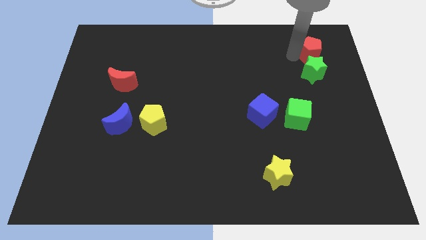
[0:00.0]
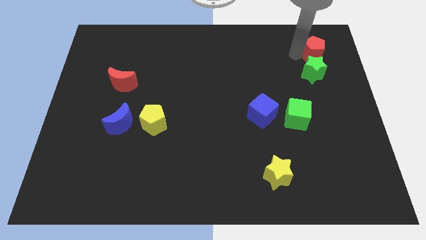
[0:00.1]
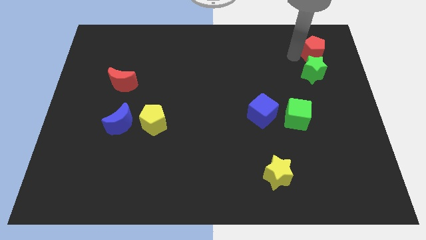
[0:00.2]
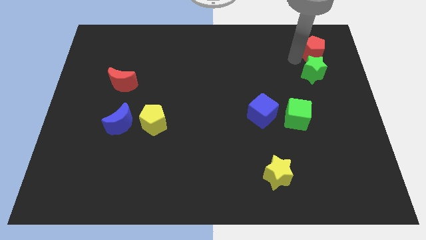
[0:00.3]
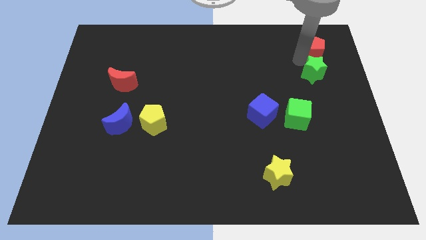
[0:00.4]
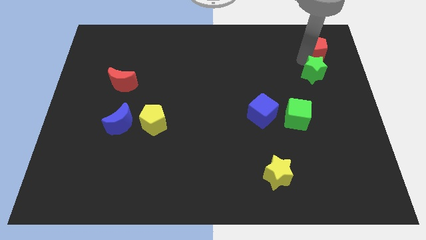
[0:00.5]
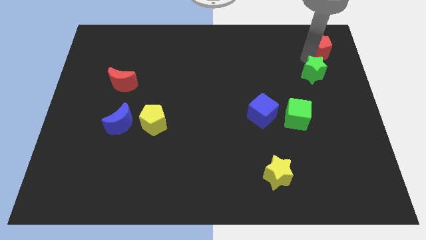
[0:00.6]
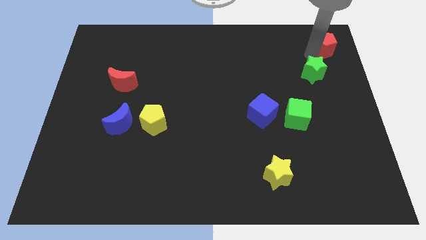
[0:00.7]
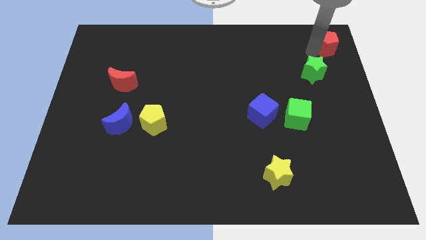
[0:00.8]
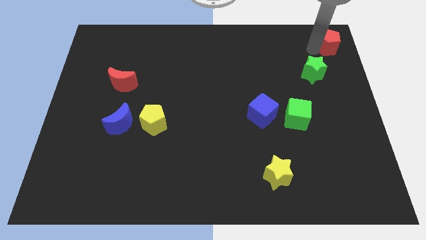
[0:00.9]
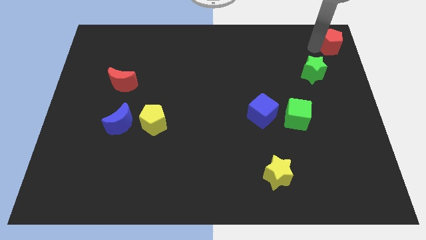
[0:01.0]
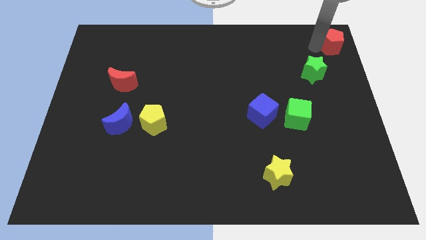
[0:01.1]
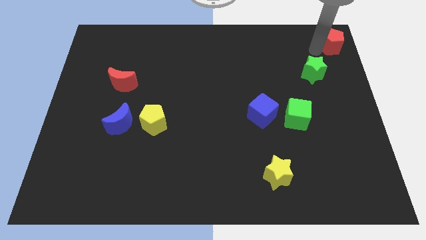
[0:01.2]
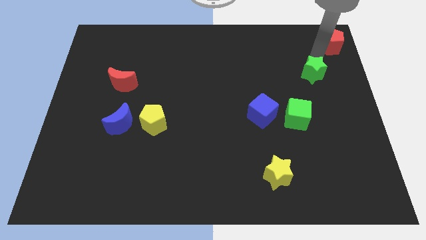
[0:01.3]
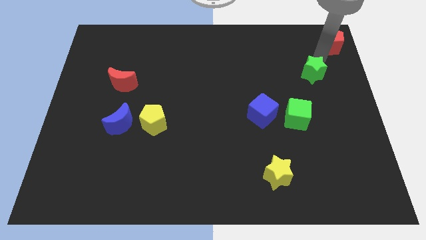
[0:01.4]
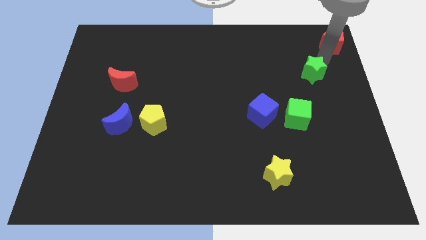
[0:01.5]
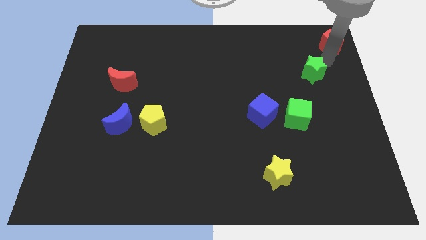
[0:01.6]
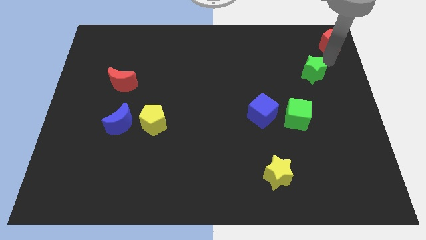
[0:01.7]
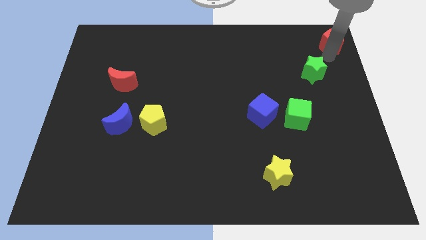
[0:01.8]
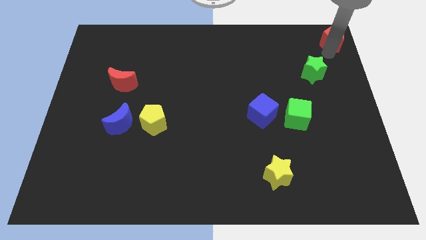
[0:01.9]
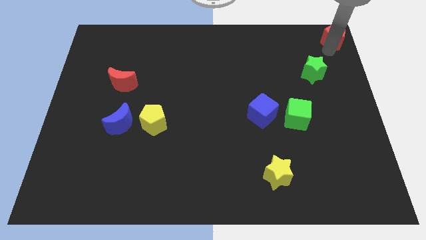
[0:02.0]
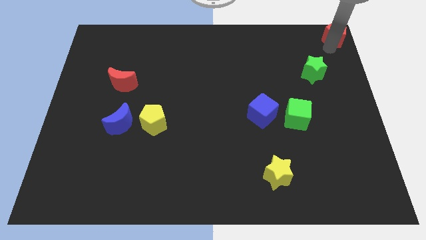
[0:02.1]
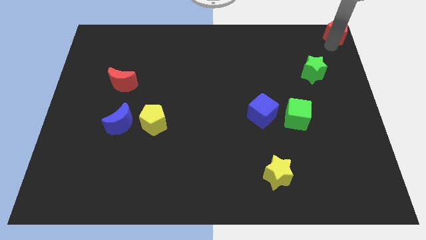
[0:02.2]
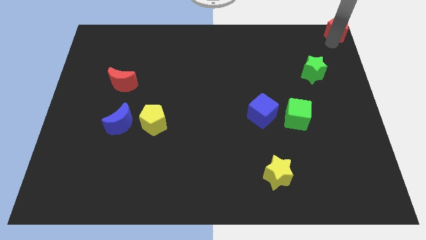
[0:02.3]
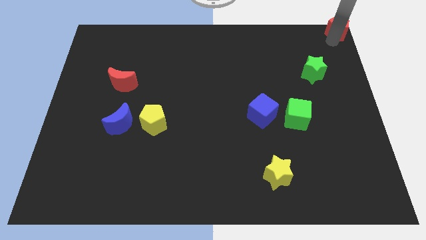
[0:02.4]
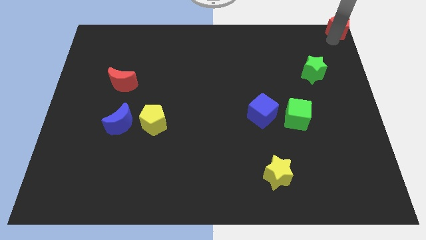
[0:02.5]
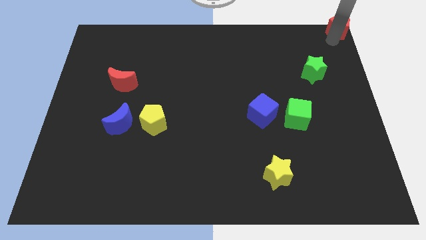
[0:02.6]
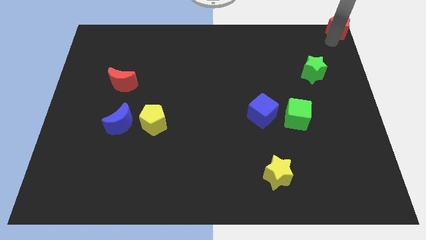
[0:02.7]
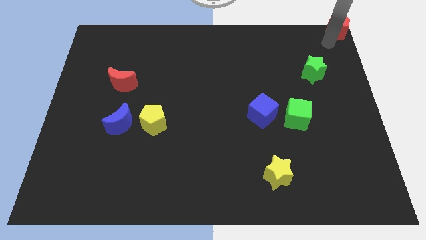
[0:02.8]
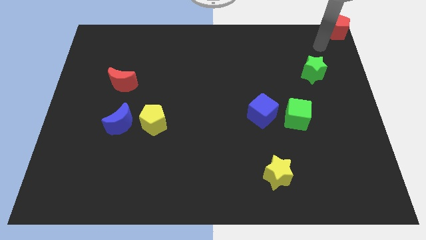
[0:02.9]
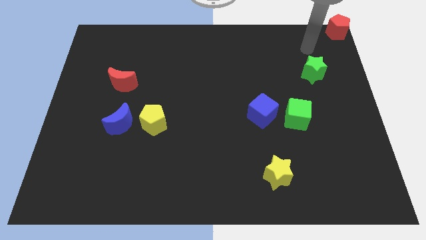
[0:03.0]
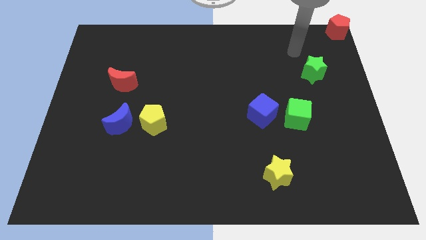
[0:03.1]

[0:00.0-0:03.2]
place red pentagon at the top right corner

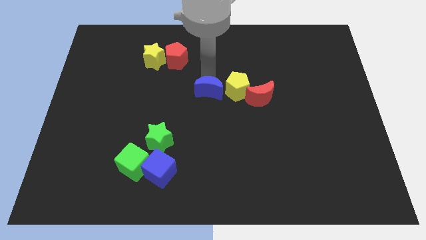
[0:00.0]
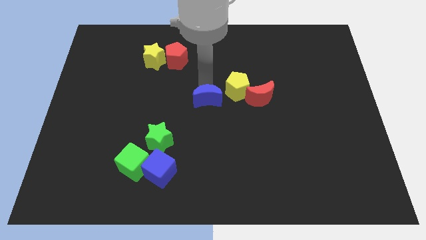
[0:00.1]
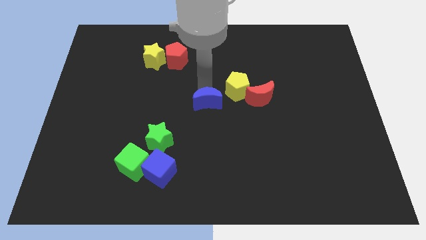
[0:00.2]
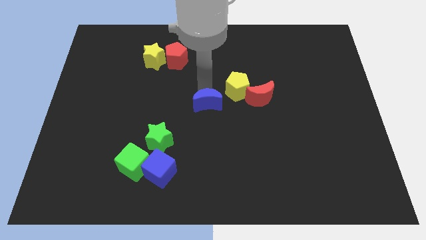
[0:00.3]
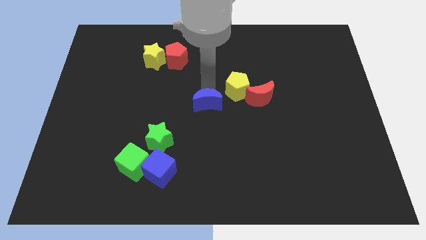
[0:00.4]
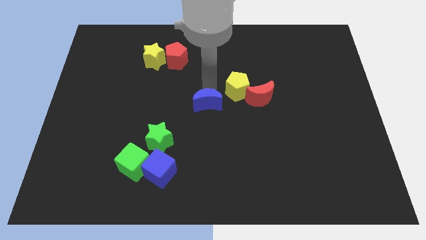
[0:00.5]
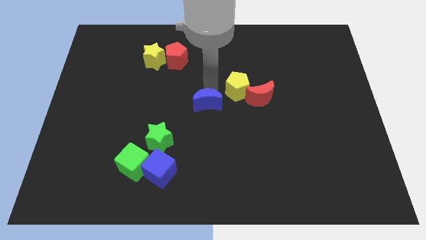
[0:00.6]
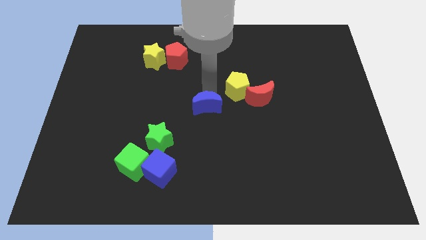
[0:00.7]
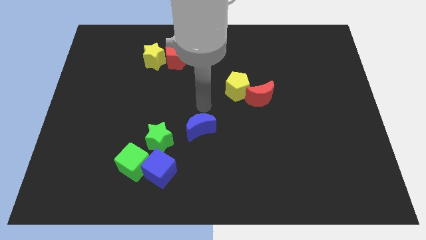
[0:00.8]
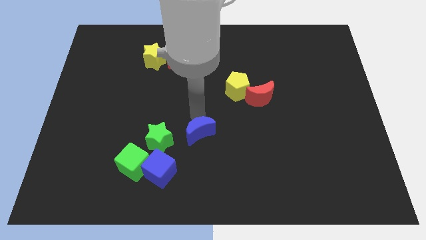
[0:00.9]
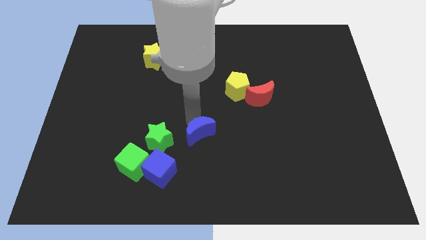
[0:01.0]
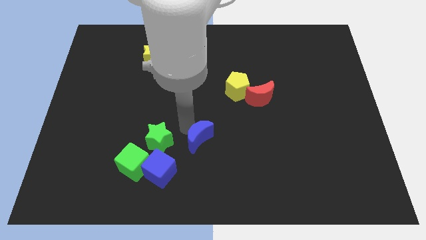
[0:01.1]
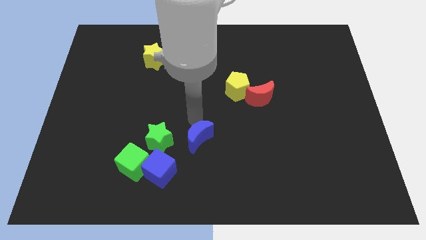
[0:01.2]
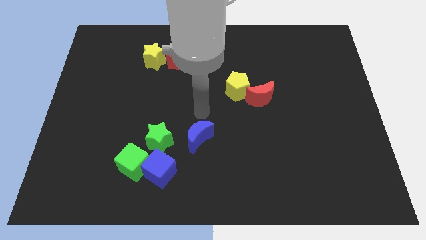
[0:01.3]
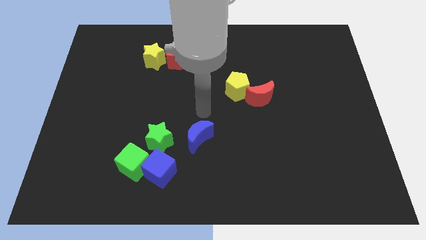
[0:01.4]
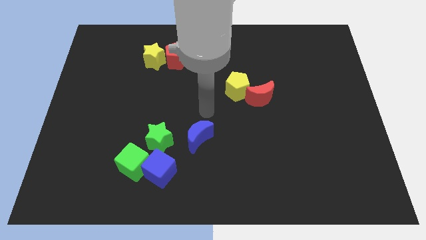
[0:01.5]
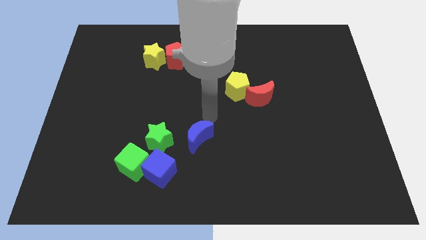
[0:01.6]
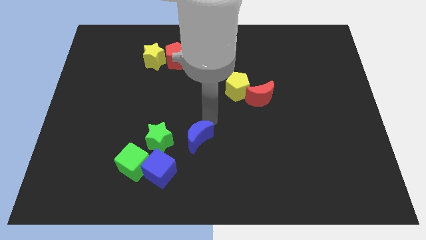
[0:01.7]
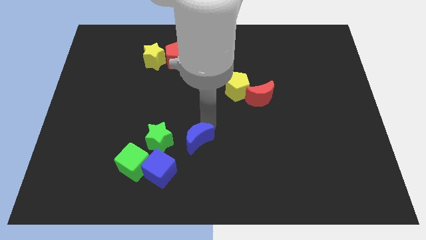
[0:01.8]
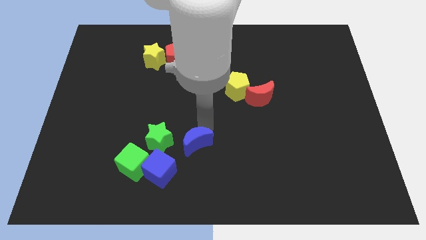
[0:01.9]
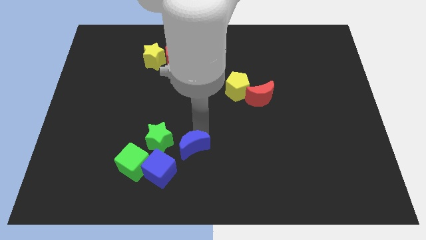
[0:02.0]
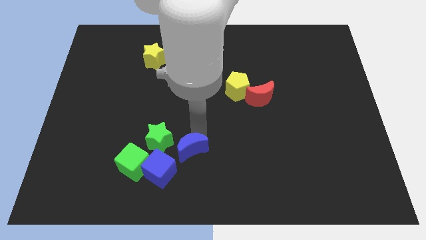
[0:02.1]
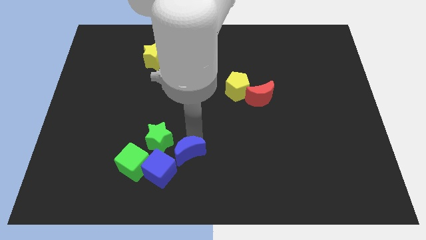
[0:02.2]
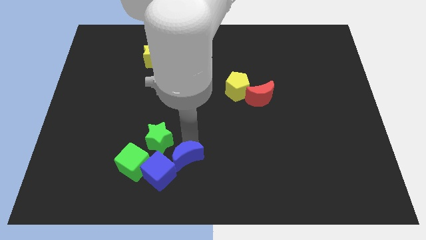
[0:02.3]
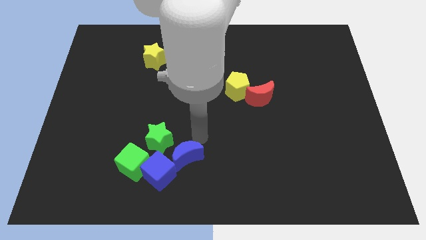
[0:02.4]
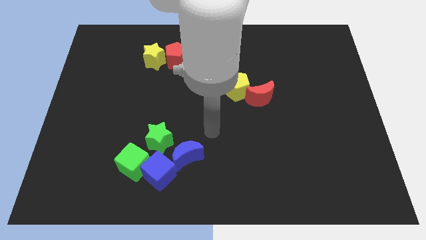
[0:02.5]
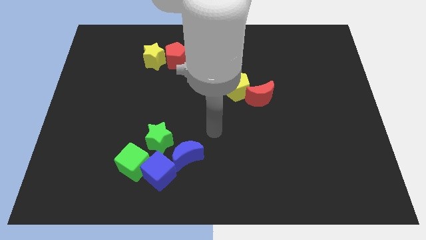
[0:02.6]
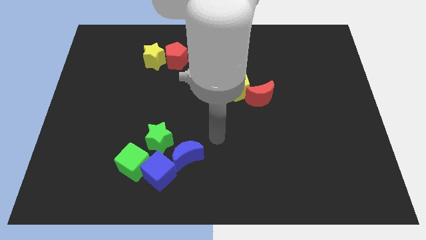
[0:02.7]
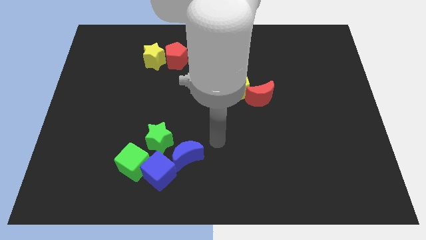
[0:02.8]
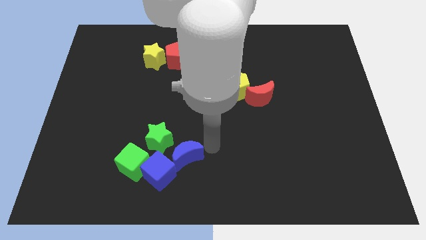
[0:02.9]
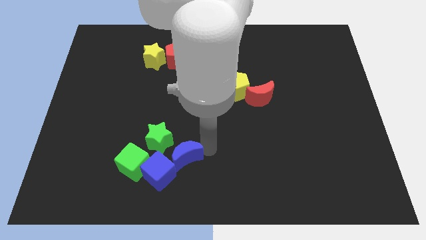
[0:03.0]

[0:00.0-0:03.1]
place blue crescent near to blue cube

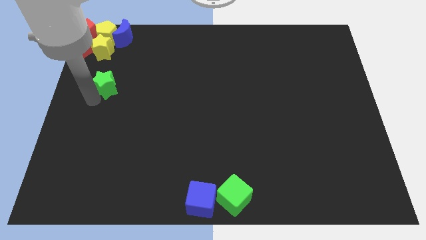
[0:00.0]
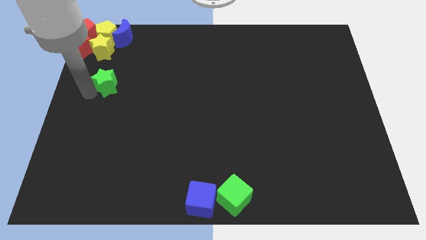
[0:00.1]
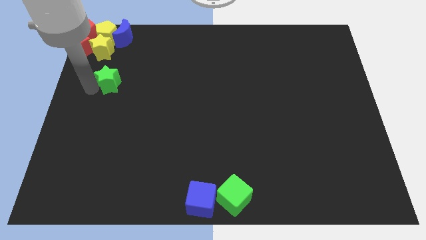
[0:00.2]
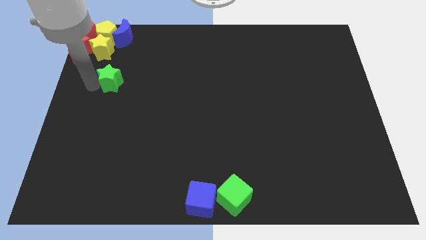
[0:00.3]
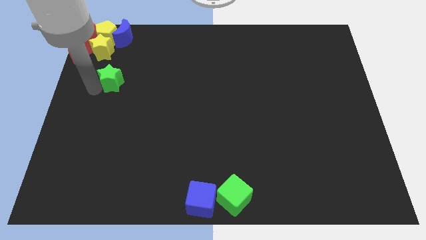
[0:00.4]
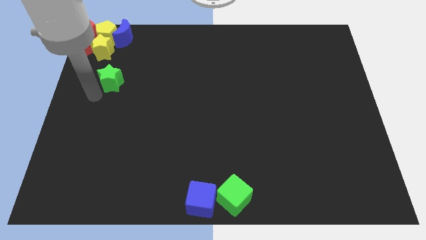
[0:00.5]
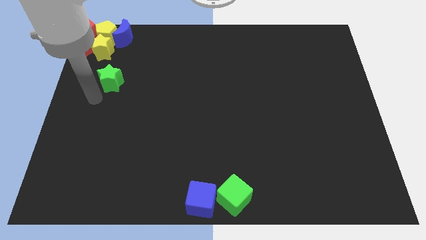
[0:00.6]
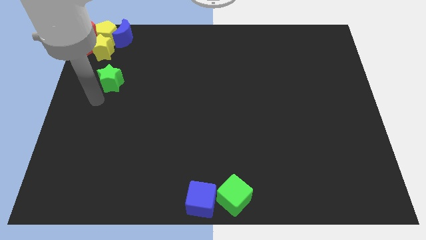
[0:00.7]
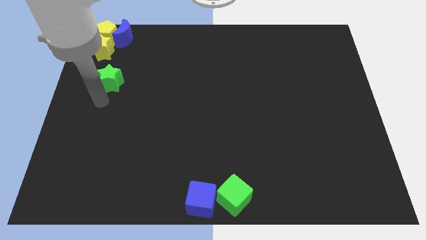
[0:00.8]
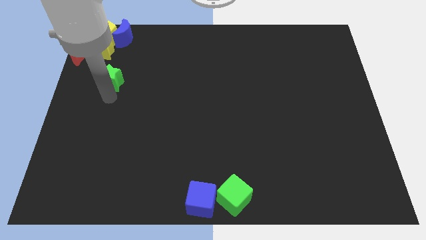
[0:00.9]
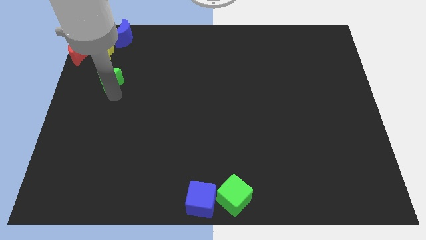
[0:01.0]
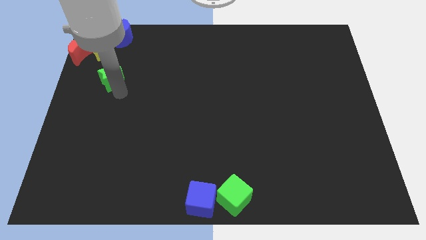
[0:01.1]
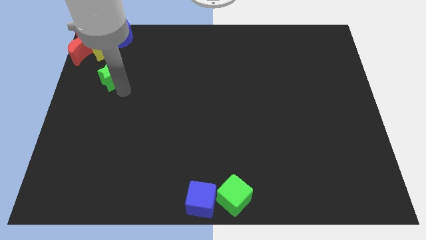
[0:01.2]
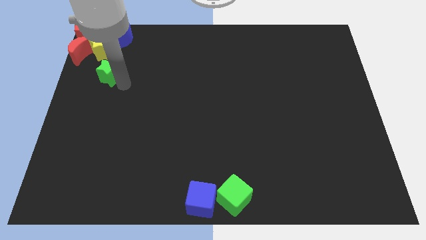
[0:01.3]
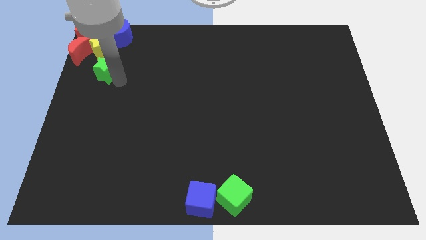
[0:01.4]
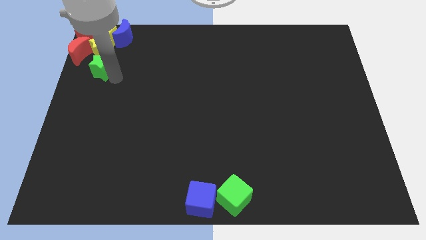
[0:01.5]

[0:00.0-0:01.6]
put the green star at the bottom of the yellow star

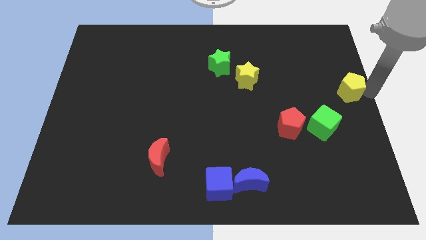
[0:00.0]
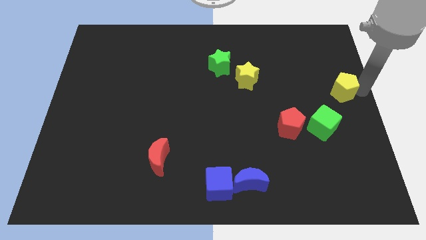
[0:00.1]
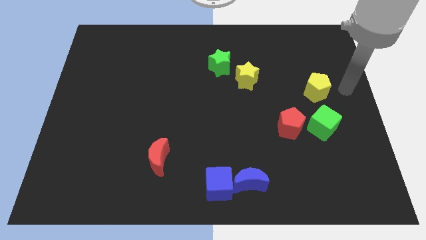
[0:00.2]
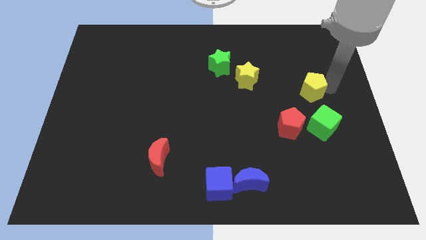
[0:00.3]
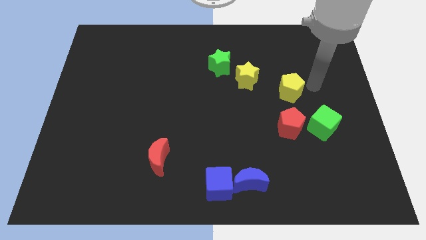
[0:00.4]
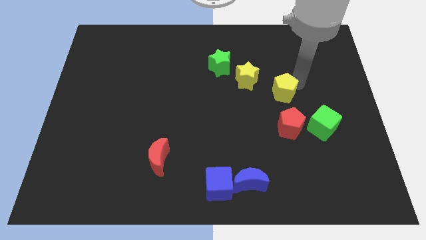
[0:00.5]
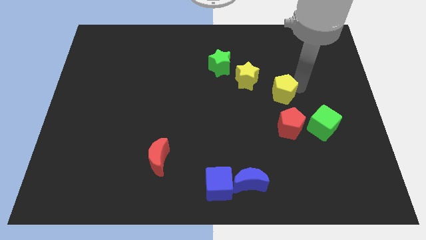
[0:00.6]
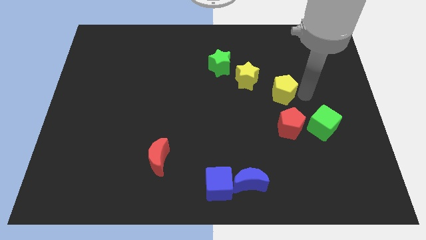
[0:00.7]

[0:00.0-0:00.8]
plca the yellow pentagon above the red pentagon

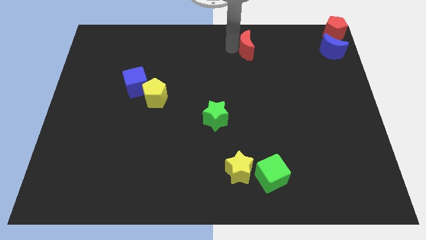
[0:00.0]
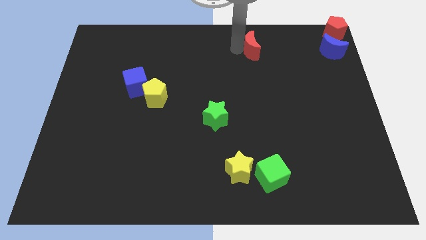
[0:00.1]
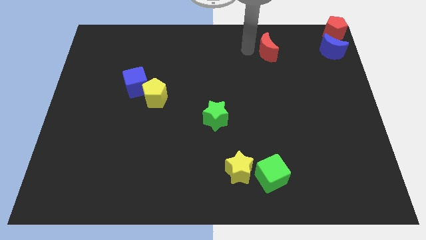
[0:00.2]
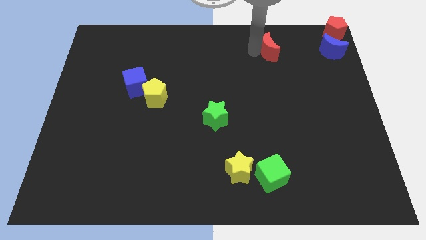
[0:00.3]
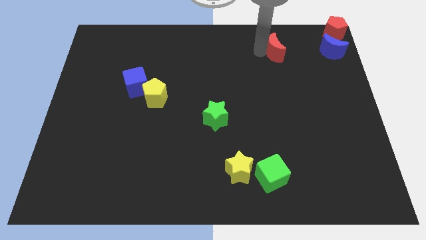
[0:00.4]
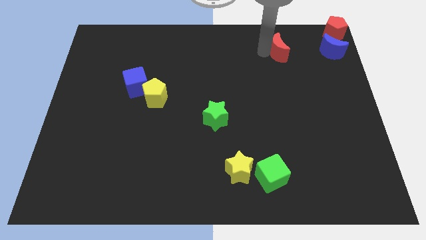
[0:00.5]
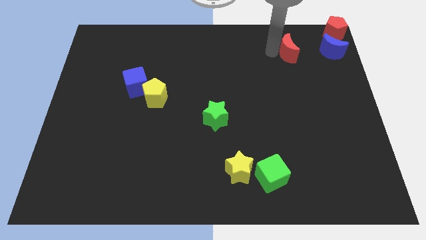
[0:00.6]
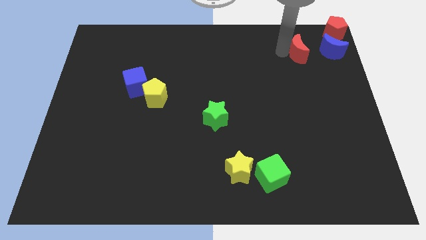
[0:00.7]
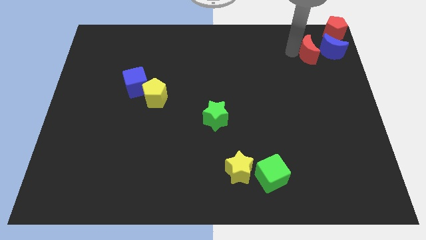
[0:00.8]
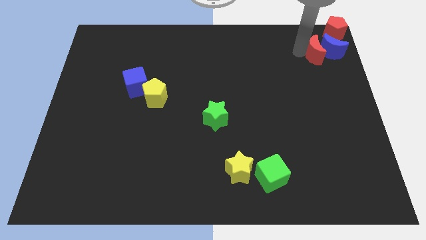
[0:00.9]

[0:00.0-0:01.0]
move the red crescent to the left of the blue crescent
